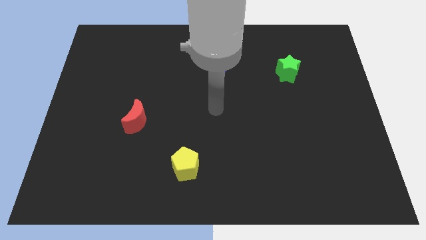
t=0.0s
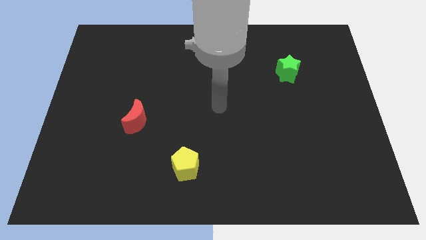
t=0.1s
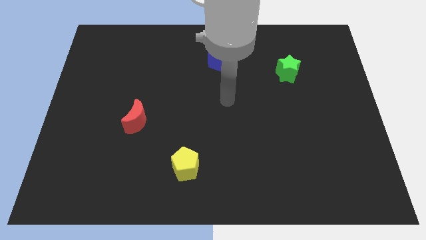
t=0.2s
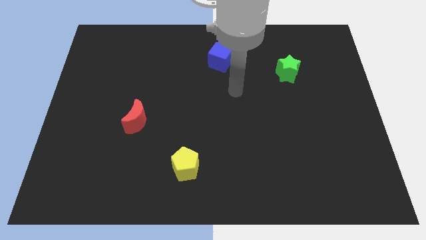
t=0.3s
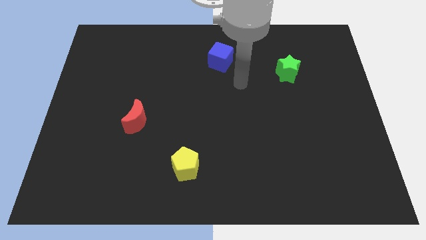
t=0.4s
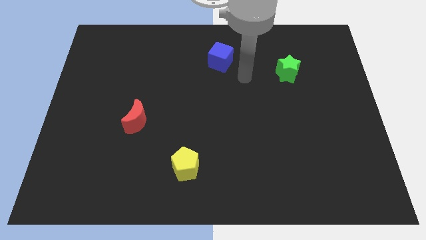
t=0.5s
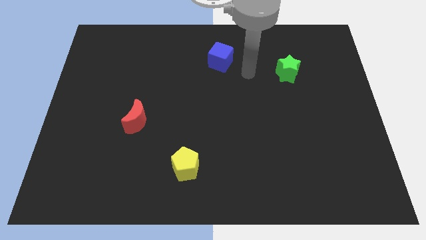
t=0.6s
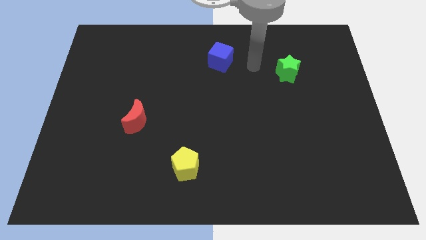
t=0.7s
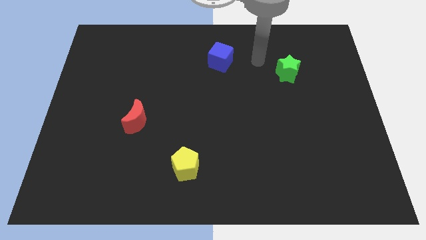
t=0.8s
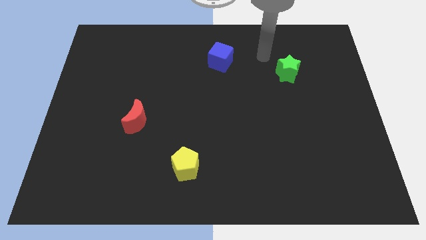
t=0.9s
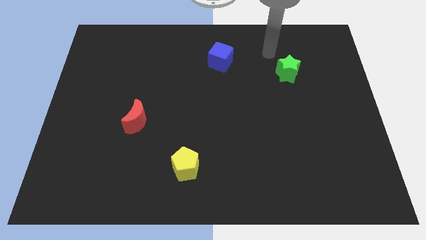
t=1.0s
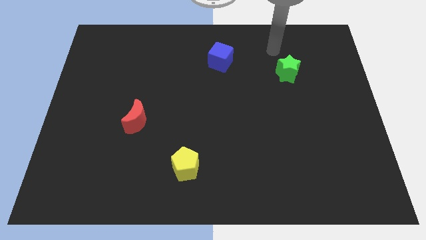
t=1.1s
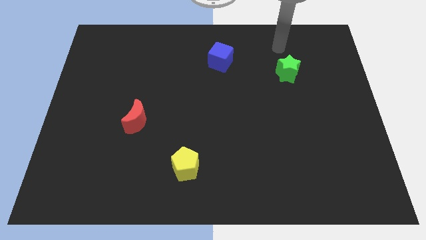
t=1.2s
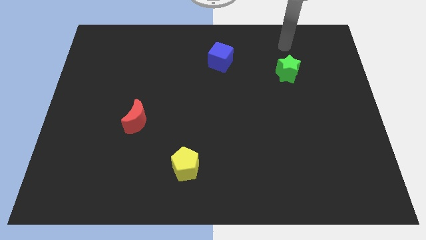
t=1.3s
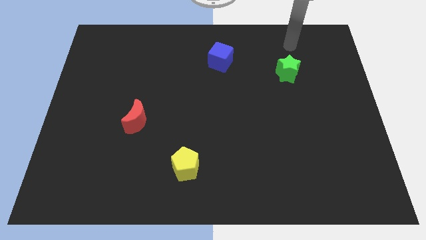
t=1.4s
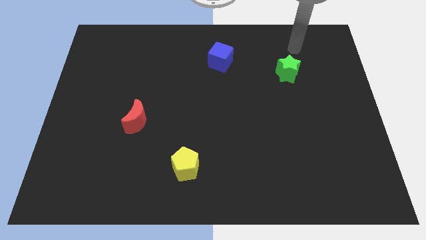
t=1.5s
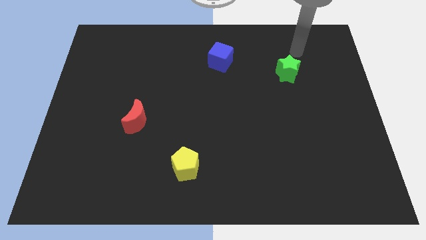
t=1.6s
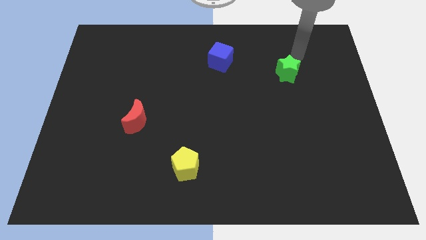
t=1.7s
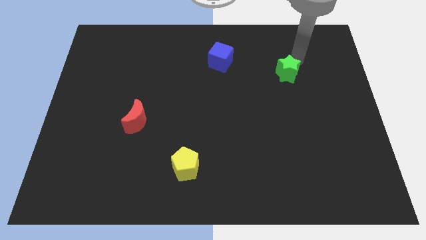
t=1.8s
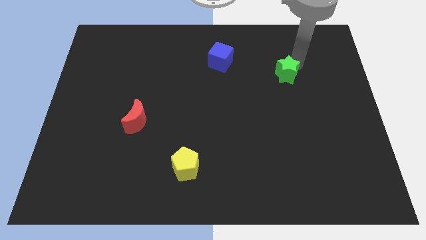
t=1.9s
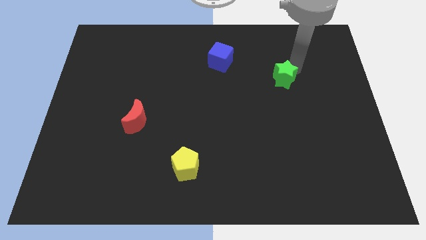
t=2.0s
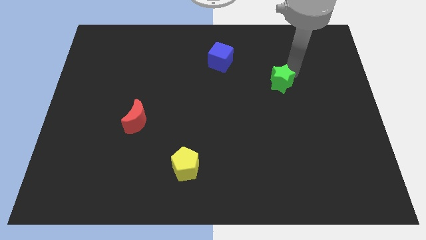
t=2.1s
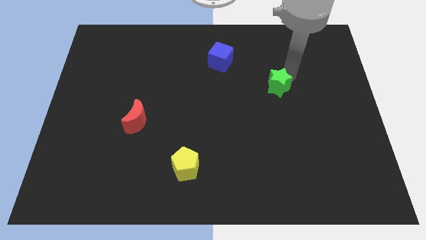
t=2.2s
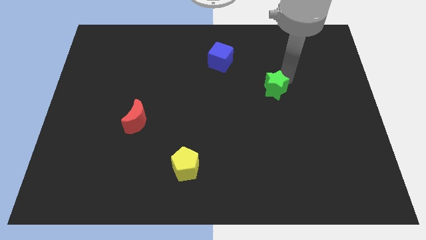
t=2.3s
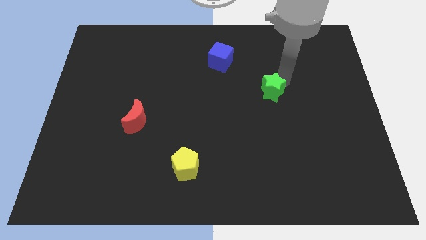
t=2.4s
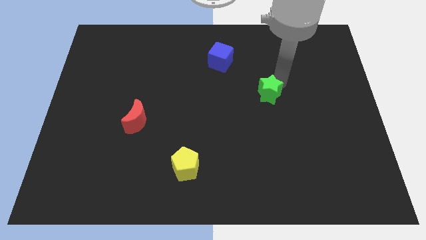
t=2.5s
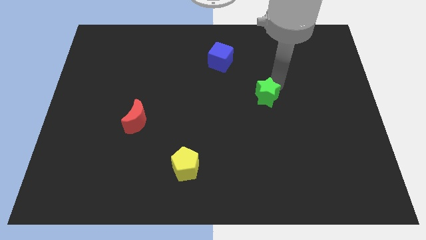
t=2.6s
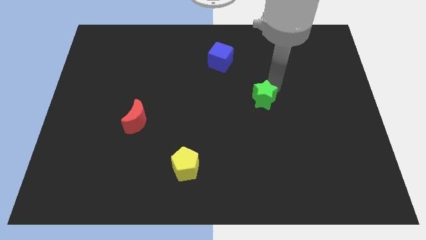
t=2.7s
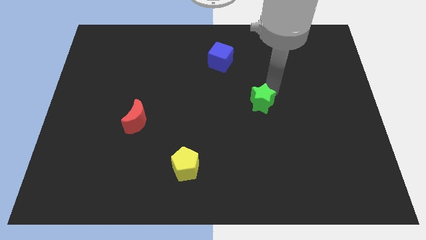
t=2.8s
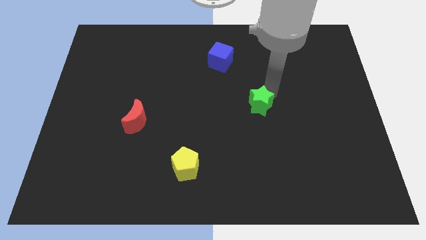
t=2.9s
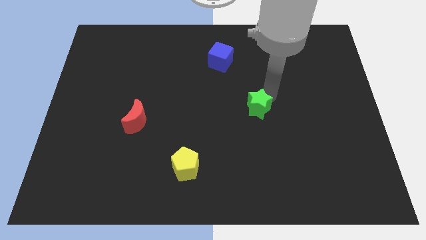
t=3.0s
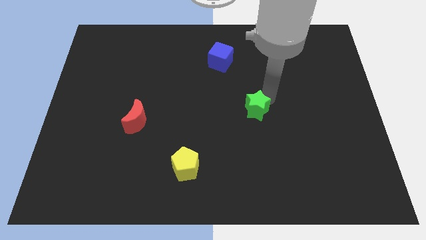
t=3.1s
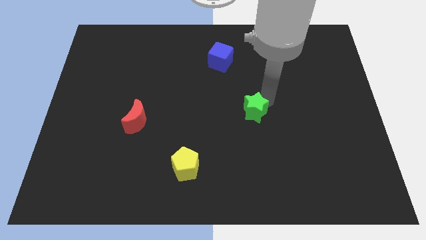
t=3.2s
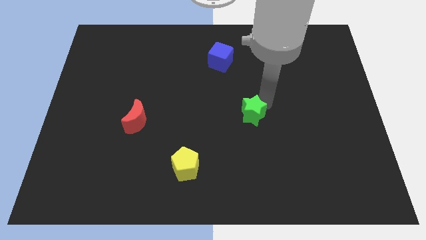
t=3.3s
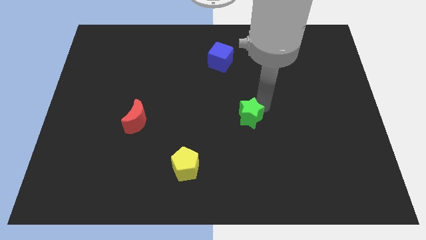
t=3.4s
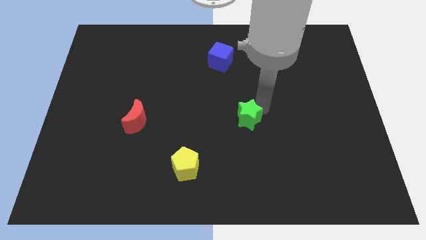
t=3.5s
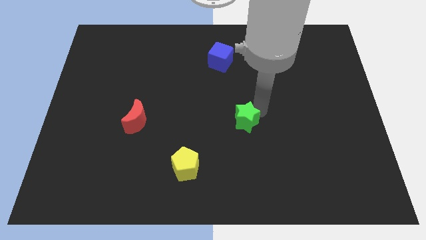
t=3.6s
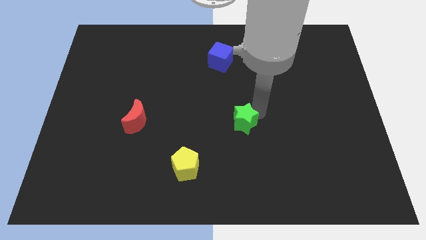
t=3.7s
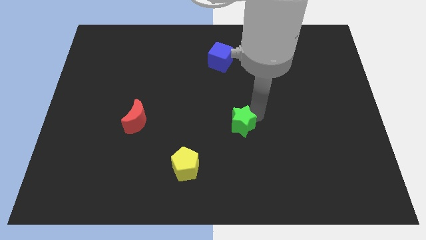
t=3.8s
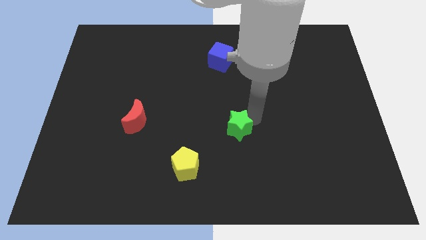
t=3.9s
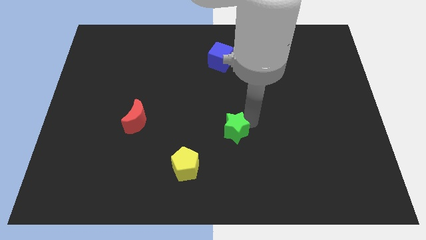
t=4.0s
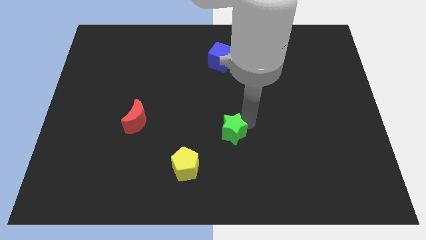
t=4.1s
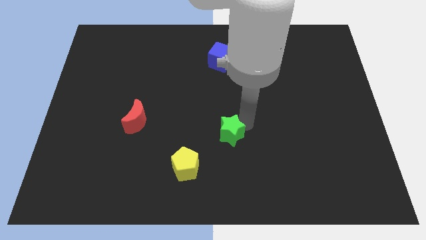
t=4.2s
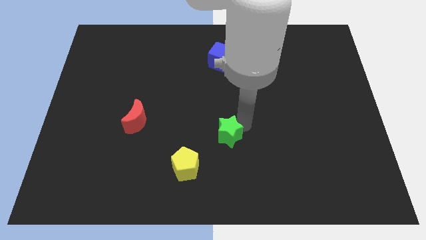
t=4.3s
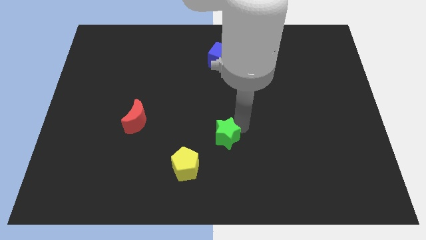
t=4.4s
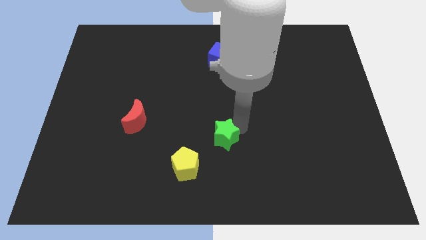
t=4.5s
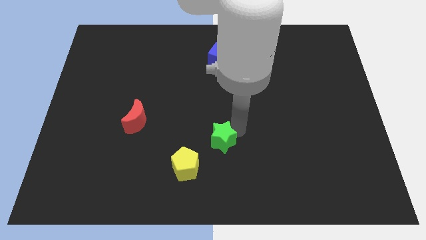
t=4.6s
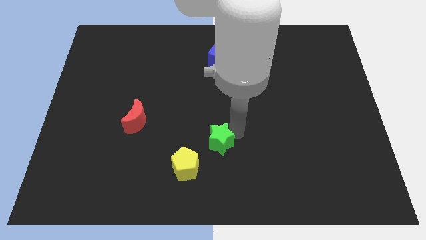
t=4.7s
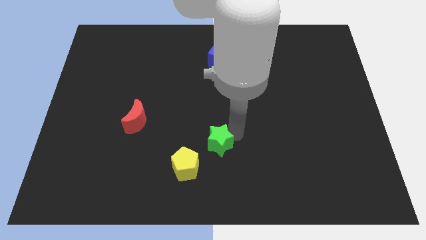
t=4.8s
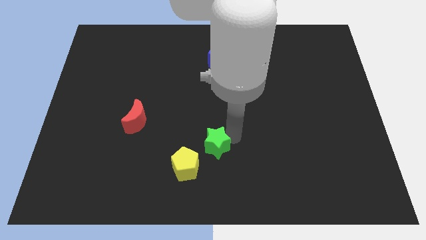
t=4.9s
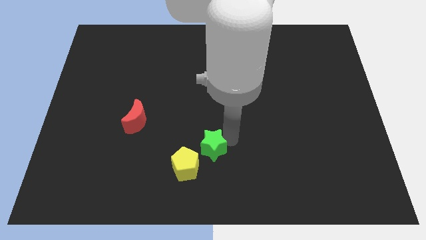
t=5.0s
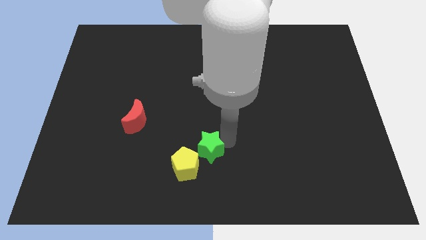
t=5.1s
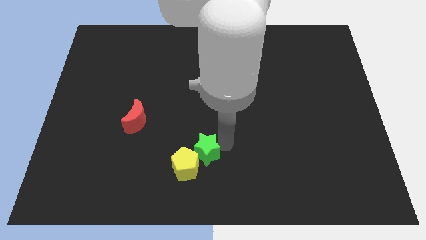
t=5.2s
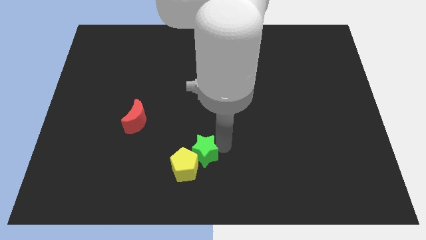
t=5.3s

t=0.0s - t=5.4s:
slide the green block towards the pentagon

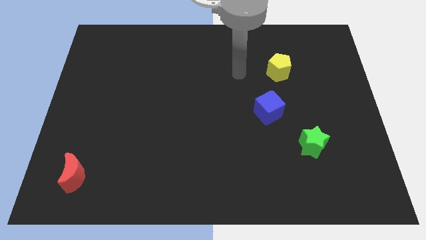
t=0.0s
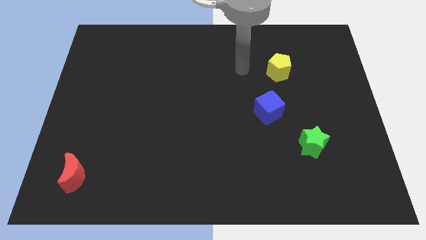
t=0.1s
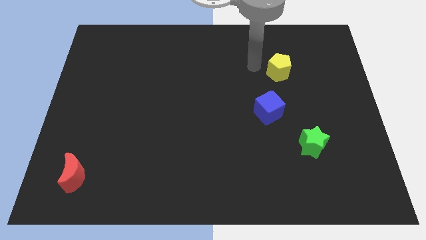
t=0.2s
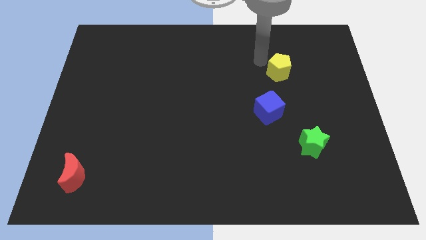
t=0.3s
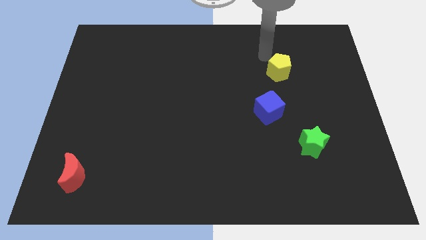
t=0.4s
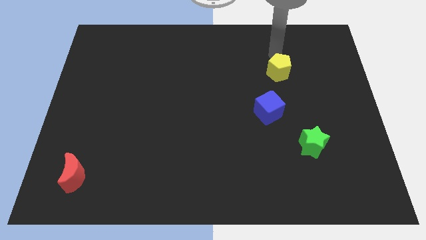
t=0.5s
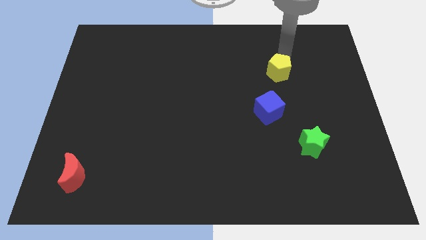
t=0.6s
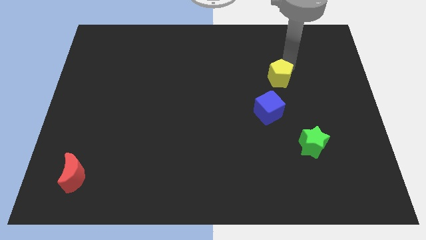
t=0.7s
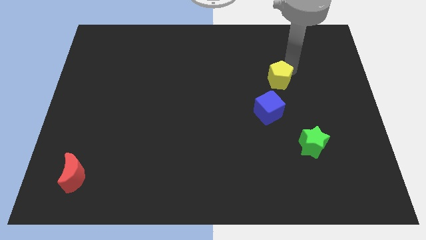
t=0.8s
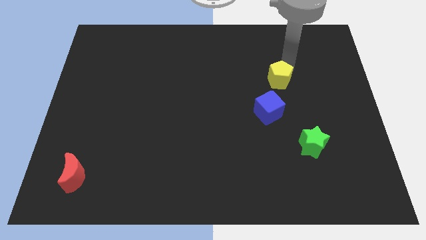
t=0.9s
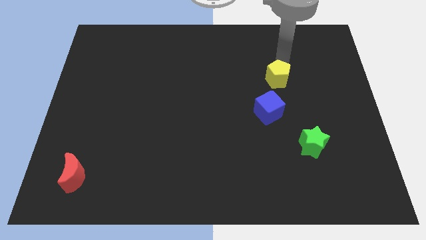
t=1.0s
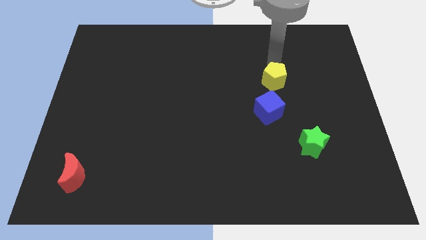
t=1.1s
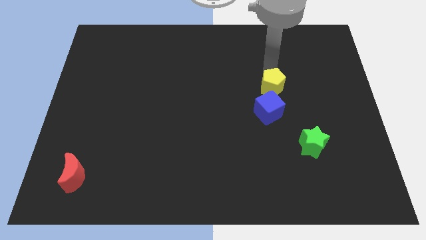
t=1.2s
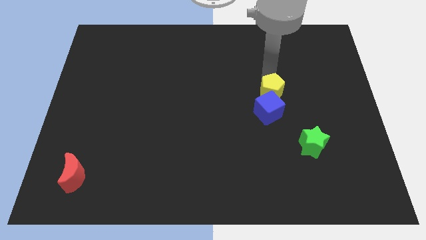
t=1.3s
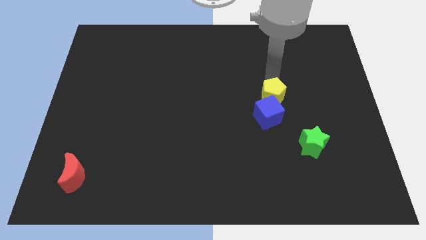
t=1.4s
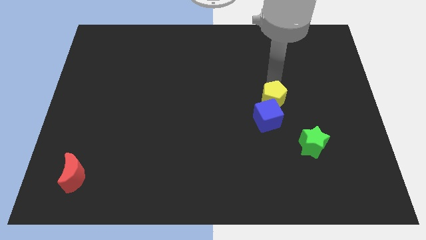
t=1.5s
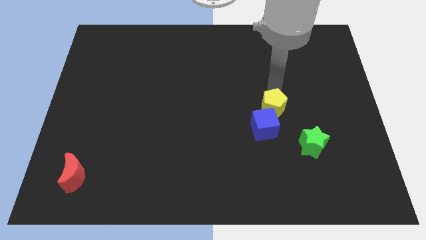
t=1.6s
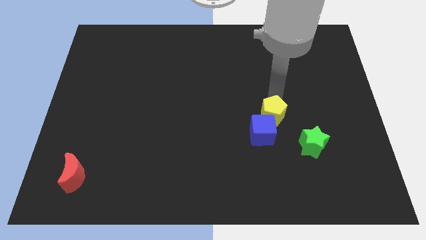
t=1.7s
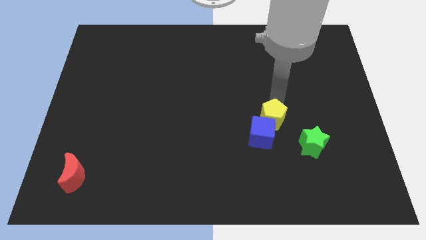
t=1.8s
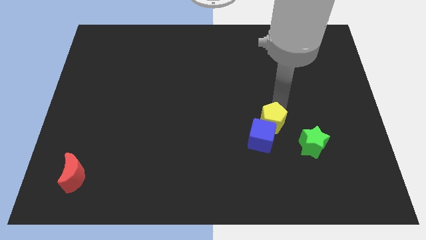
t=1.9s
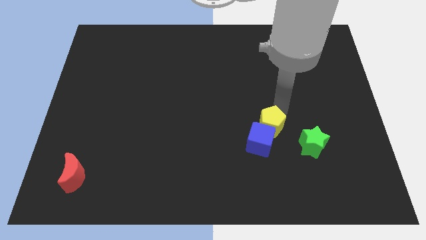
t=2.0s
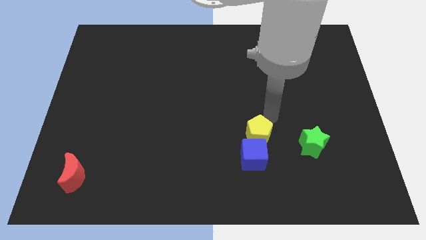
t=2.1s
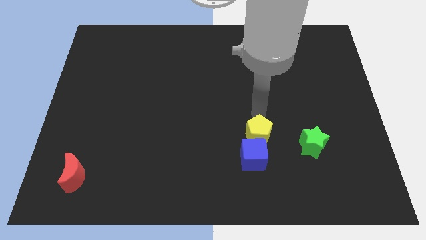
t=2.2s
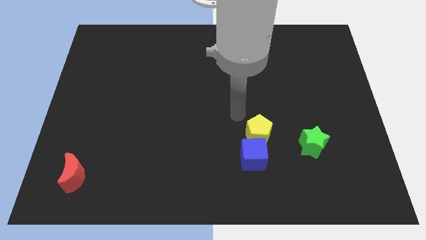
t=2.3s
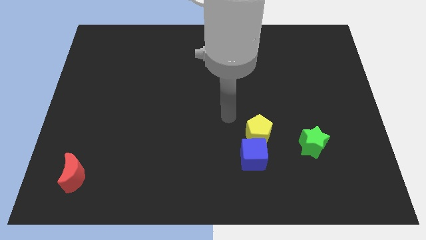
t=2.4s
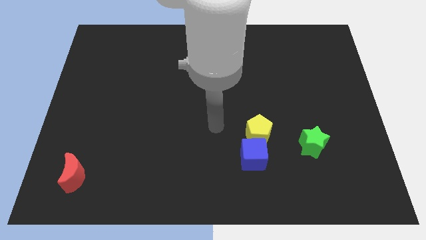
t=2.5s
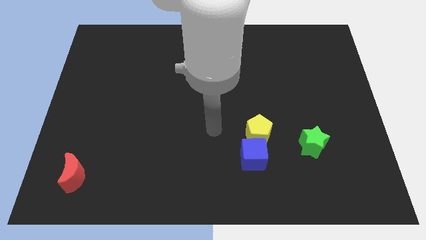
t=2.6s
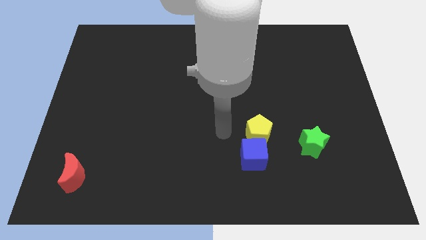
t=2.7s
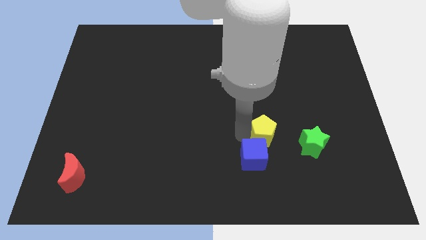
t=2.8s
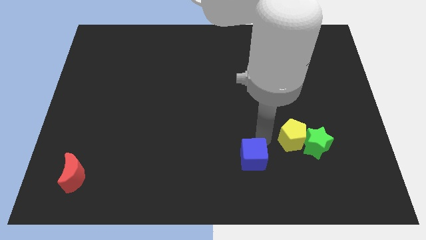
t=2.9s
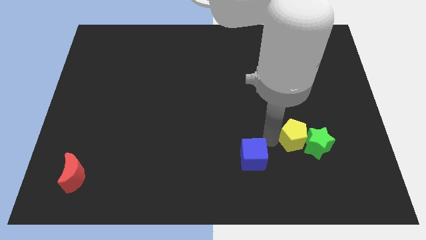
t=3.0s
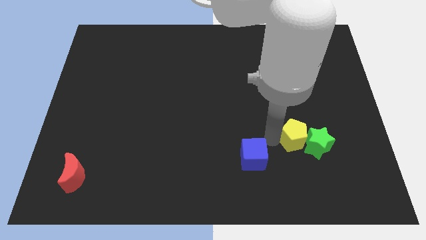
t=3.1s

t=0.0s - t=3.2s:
put the pentagon to the green star
